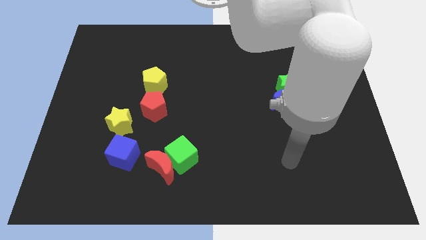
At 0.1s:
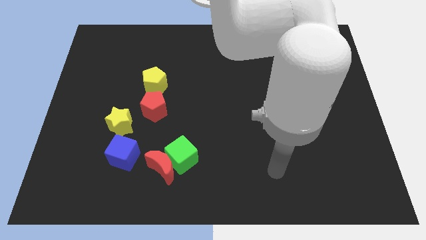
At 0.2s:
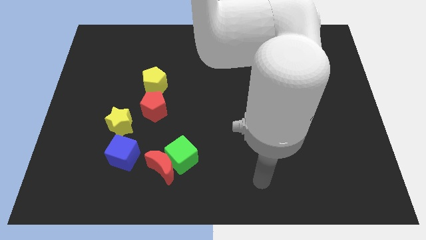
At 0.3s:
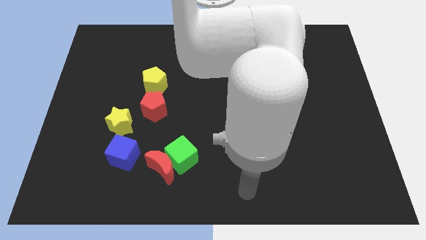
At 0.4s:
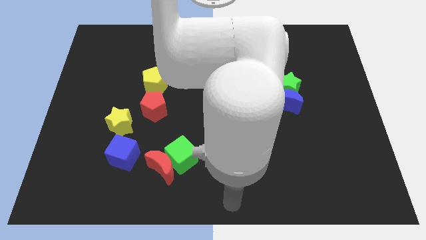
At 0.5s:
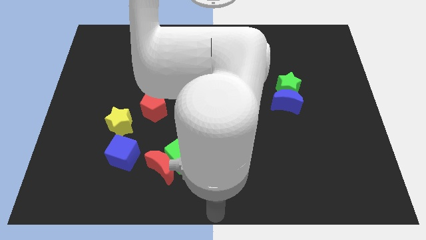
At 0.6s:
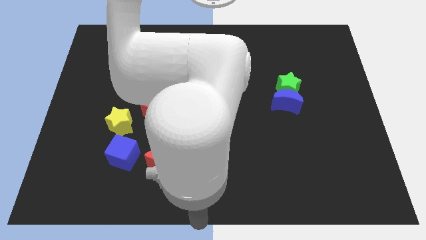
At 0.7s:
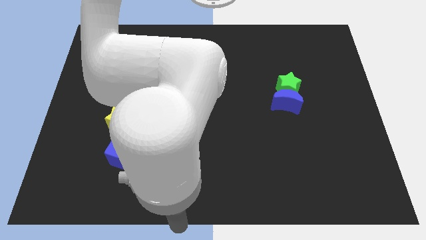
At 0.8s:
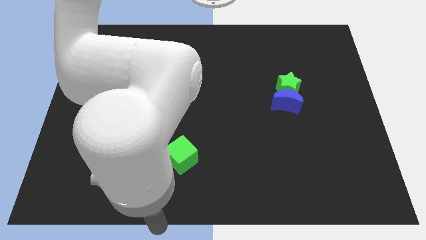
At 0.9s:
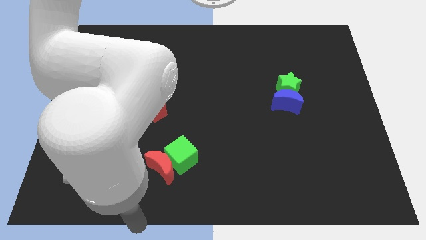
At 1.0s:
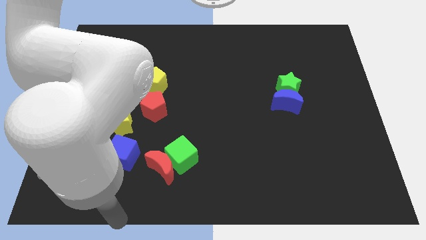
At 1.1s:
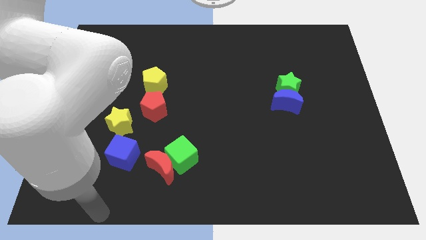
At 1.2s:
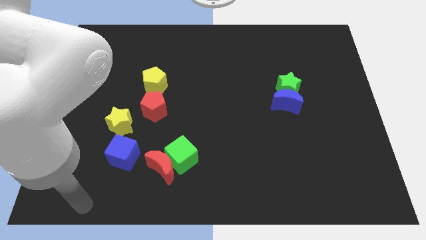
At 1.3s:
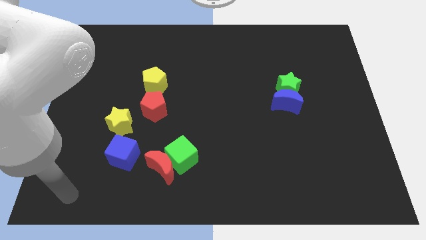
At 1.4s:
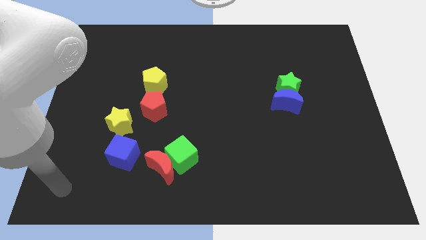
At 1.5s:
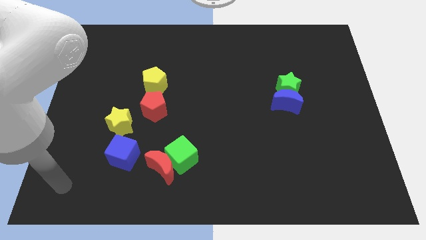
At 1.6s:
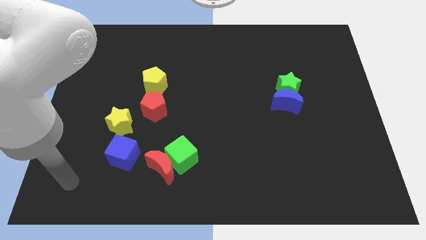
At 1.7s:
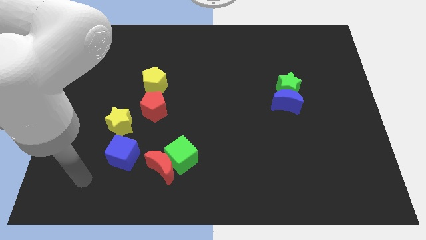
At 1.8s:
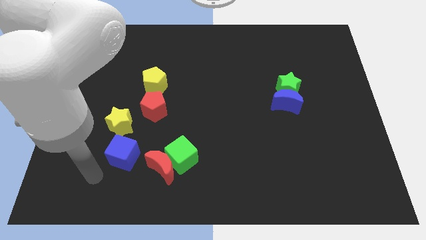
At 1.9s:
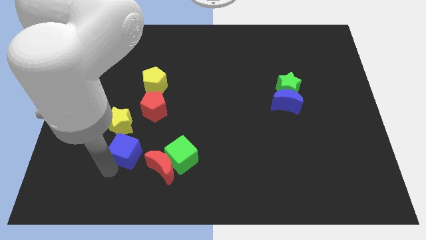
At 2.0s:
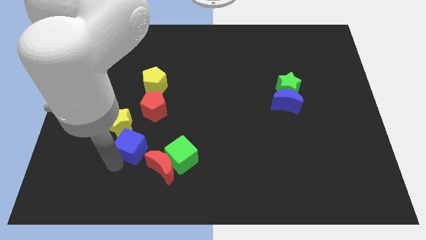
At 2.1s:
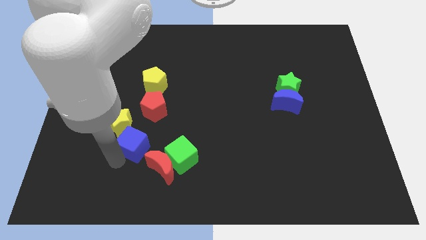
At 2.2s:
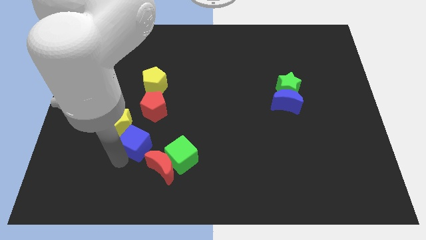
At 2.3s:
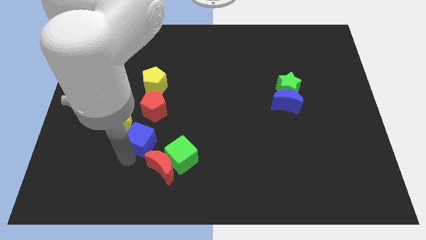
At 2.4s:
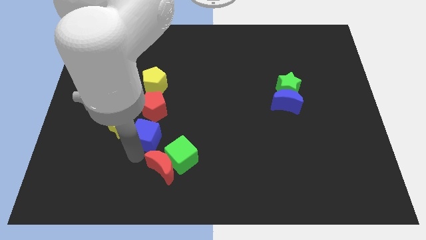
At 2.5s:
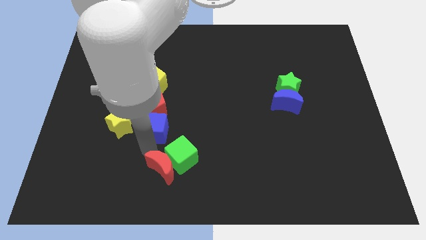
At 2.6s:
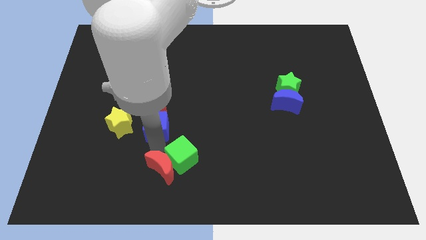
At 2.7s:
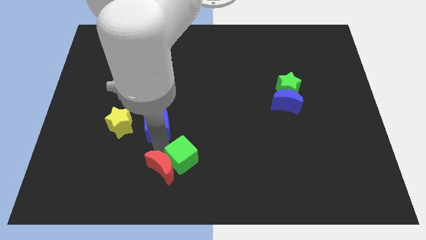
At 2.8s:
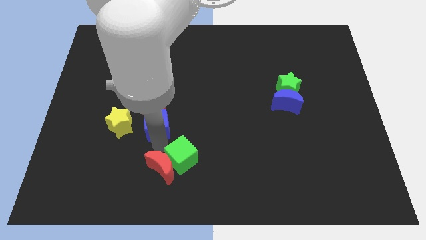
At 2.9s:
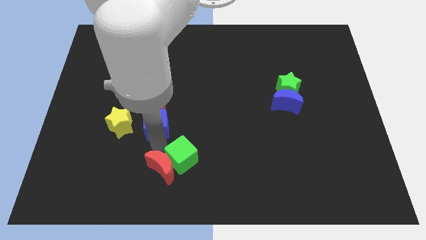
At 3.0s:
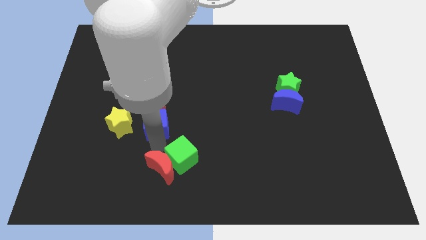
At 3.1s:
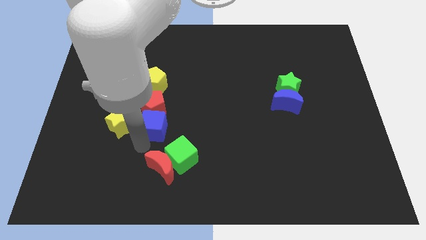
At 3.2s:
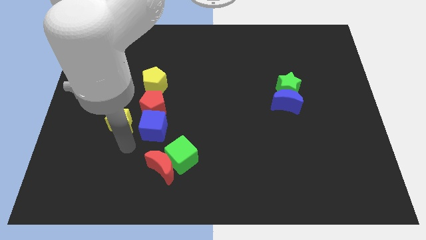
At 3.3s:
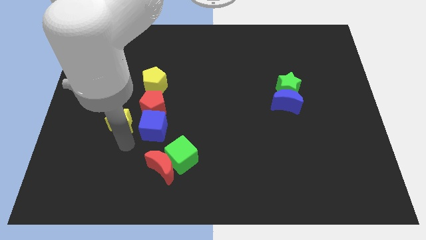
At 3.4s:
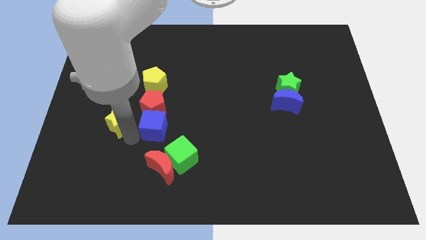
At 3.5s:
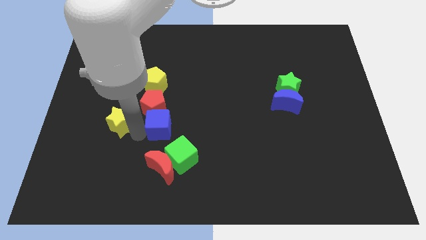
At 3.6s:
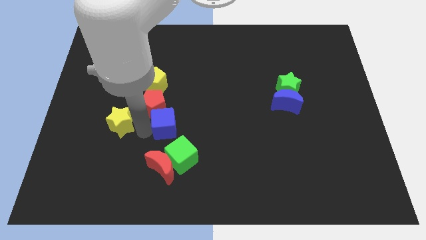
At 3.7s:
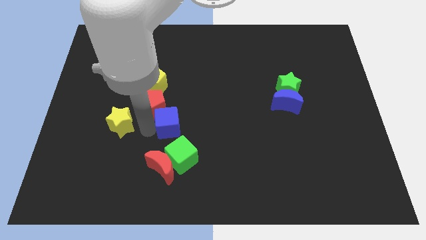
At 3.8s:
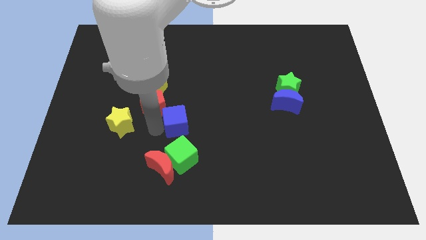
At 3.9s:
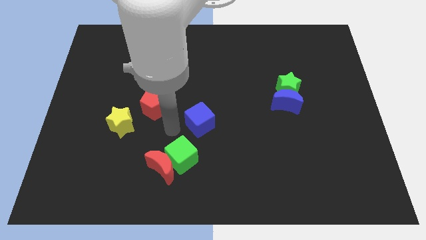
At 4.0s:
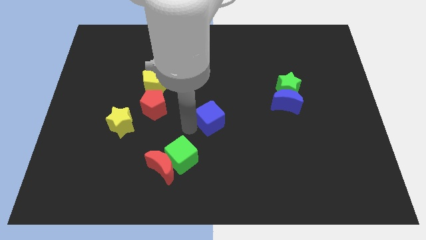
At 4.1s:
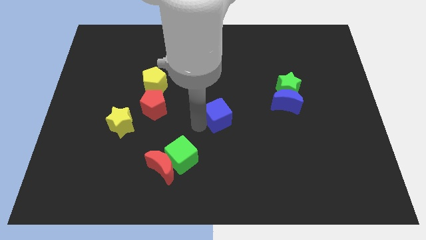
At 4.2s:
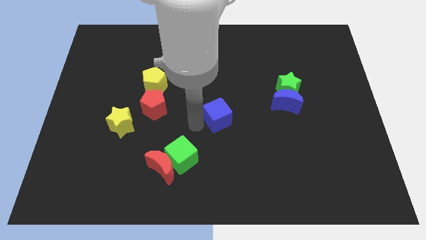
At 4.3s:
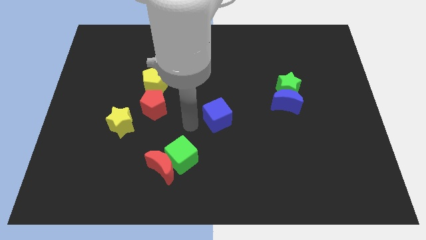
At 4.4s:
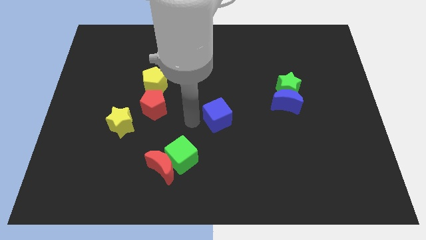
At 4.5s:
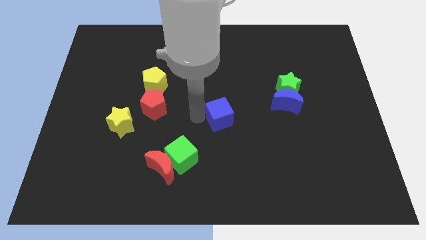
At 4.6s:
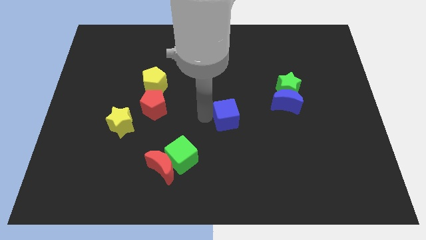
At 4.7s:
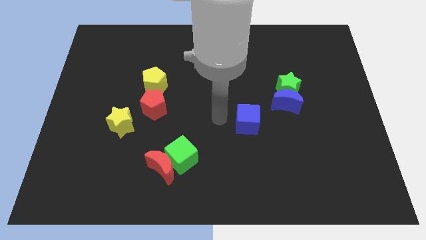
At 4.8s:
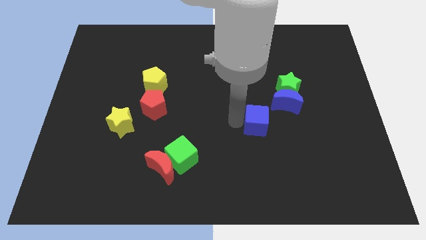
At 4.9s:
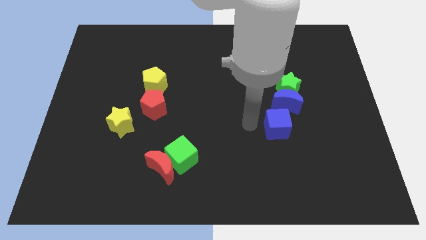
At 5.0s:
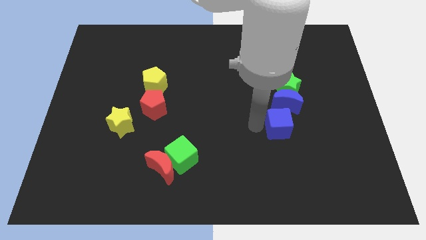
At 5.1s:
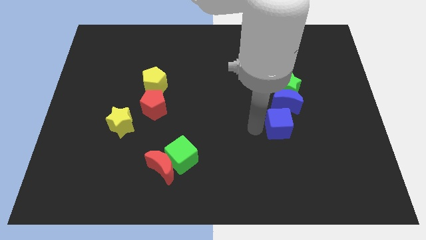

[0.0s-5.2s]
push the blue cube diagonal to the green cube

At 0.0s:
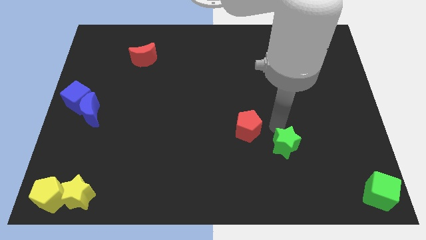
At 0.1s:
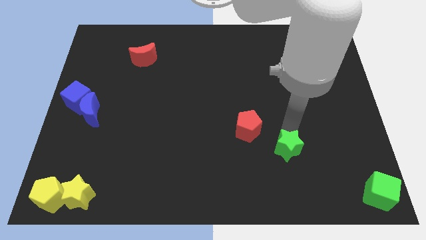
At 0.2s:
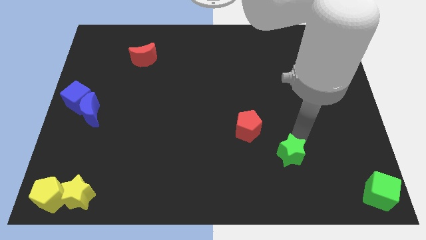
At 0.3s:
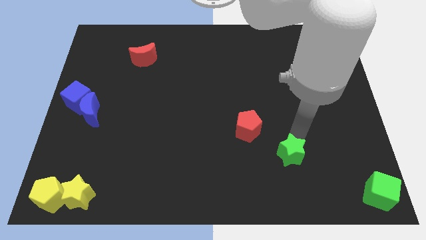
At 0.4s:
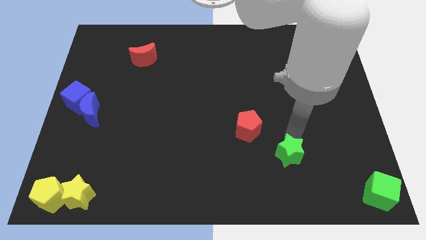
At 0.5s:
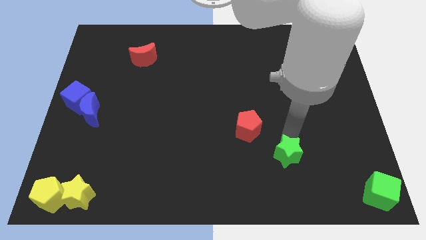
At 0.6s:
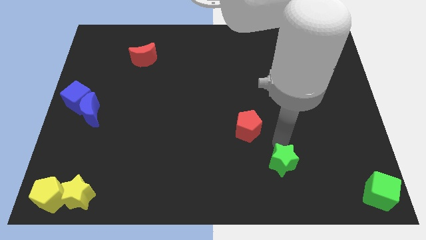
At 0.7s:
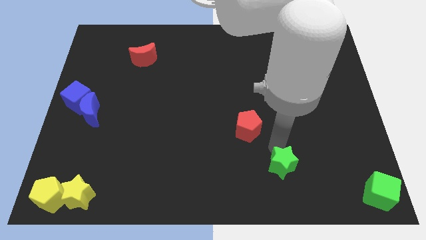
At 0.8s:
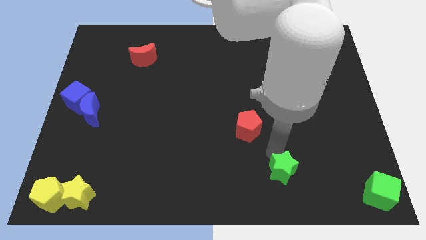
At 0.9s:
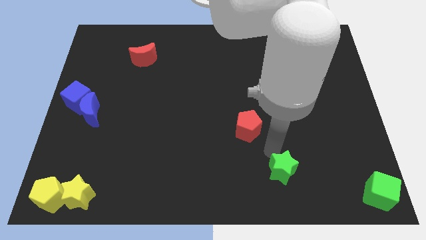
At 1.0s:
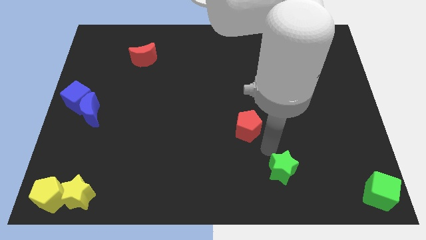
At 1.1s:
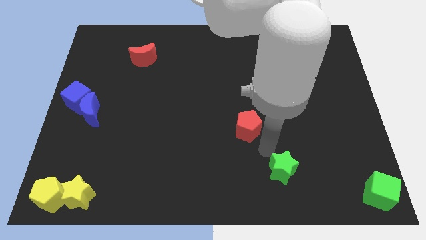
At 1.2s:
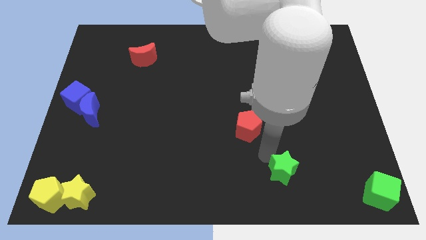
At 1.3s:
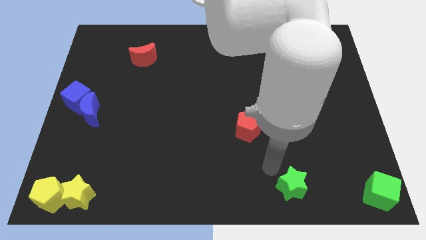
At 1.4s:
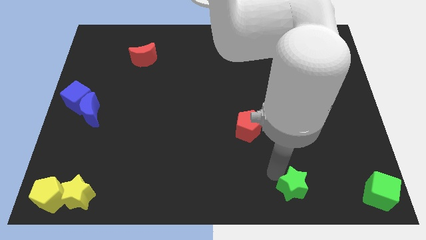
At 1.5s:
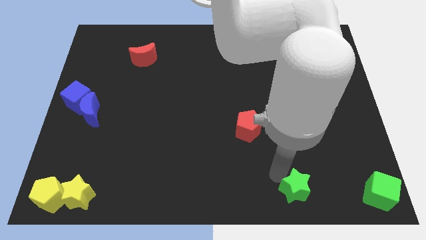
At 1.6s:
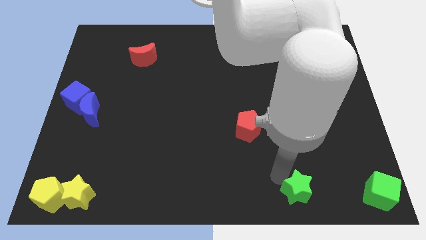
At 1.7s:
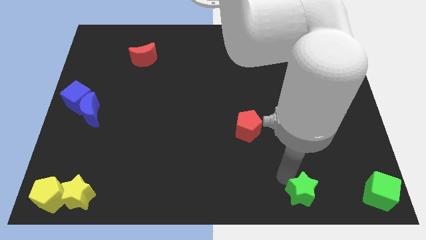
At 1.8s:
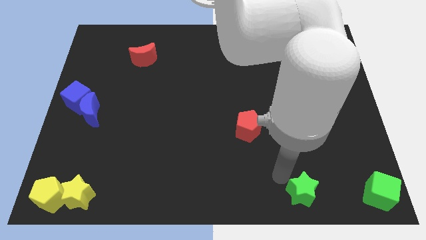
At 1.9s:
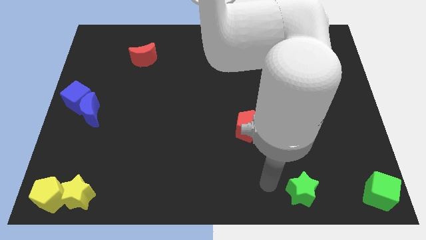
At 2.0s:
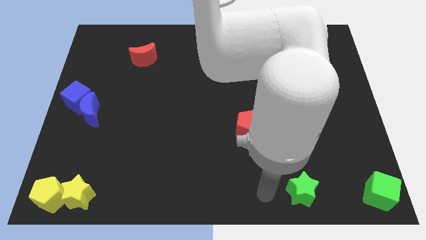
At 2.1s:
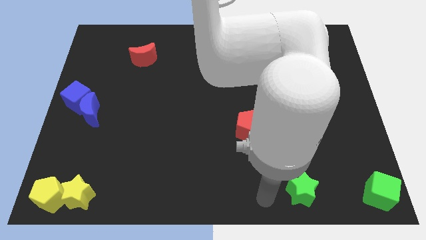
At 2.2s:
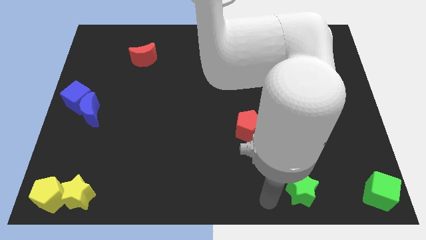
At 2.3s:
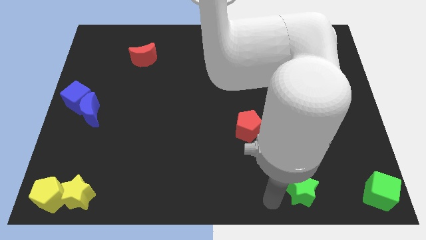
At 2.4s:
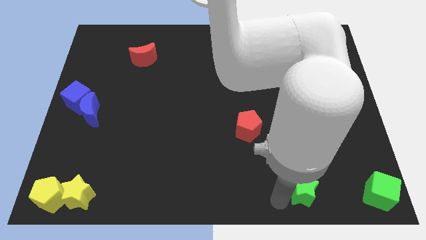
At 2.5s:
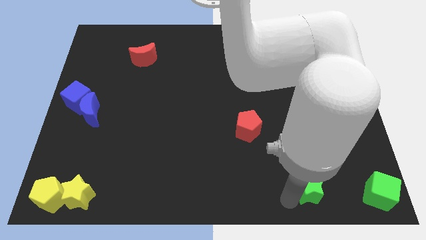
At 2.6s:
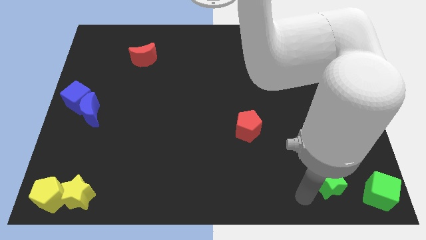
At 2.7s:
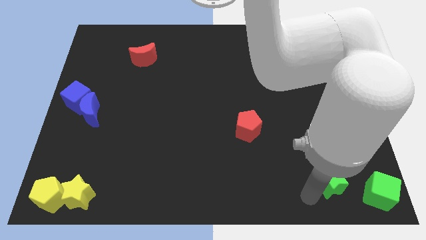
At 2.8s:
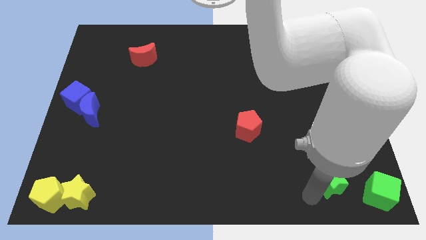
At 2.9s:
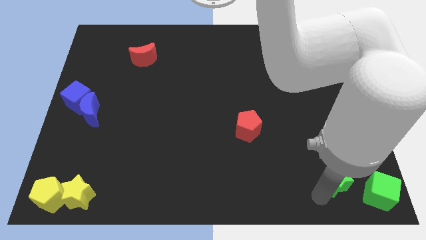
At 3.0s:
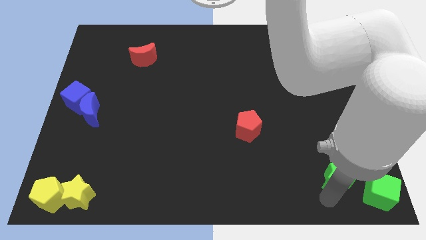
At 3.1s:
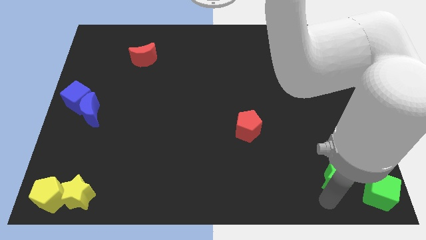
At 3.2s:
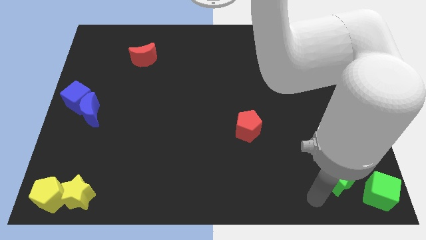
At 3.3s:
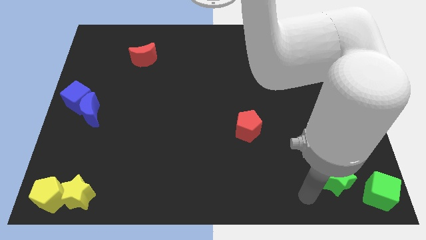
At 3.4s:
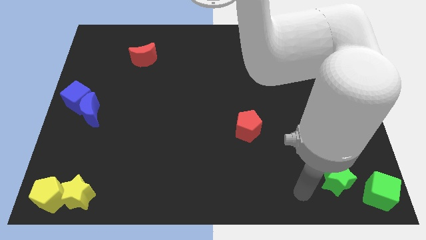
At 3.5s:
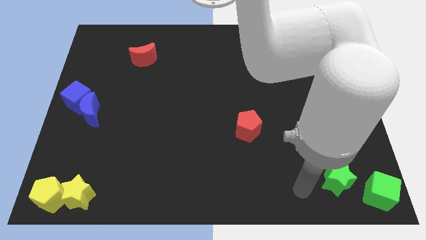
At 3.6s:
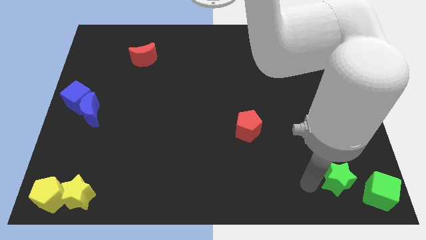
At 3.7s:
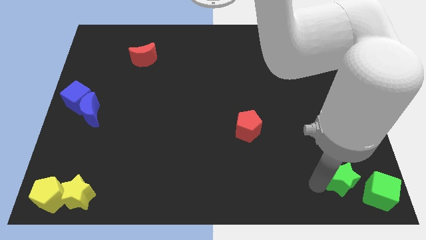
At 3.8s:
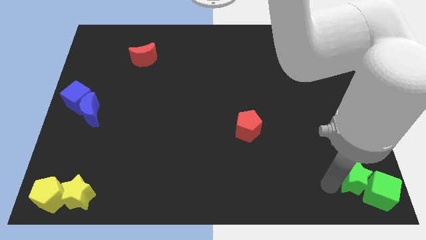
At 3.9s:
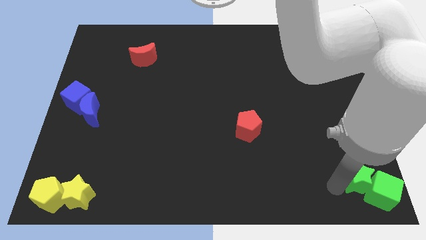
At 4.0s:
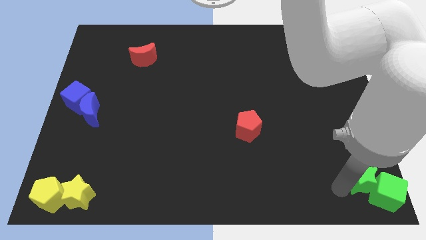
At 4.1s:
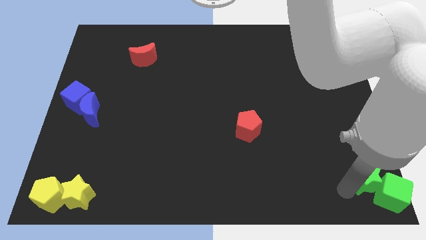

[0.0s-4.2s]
place the green star to the left side of the green cube
